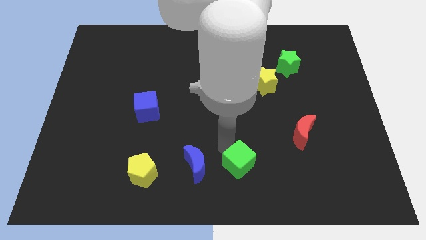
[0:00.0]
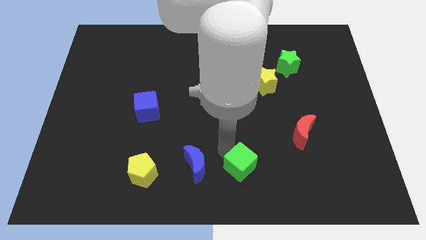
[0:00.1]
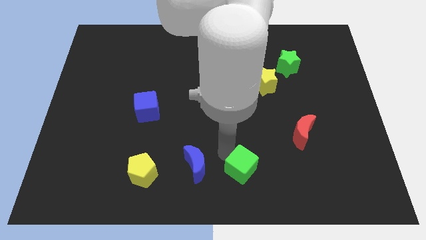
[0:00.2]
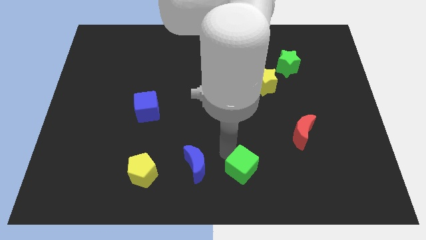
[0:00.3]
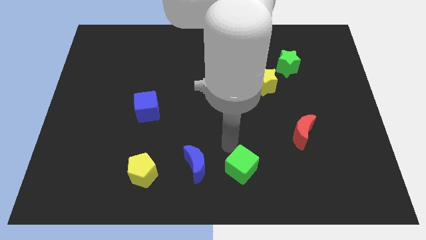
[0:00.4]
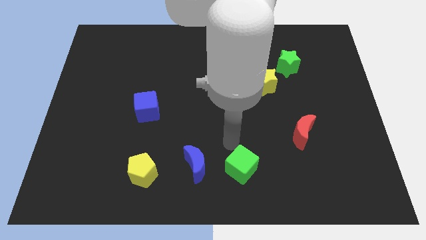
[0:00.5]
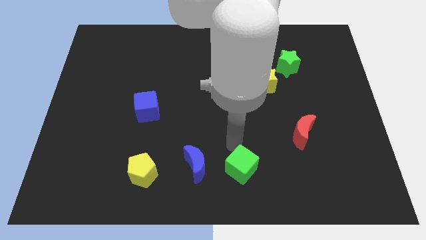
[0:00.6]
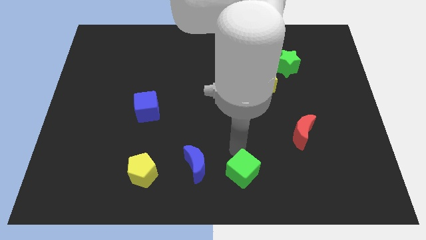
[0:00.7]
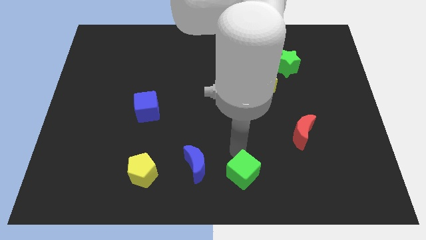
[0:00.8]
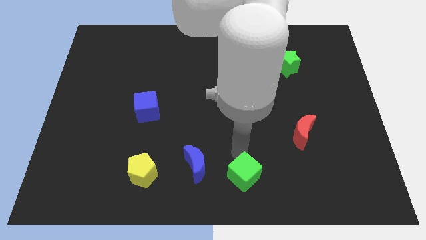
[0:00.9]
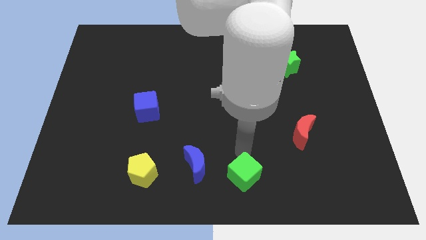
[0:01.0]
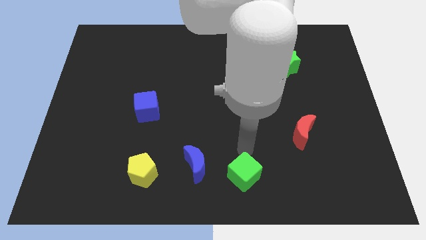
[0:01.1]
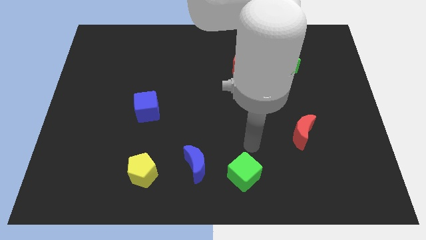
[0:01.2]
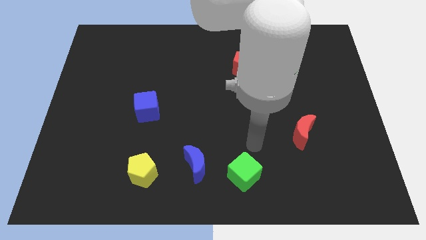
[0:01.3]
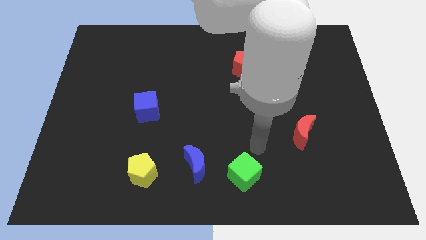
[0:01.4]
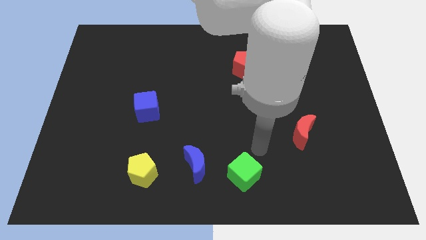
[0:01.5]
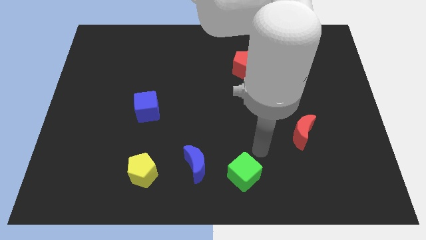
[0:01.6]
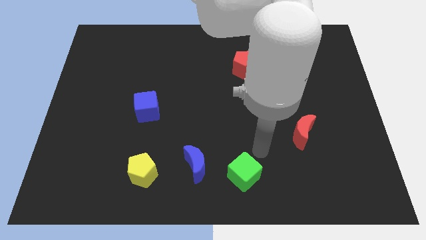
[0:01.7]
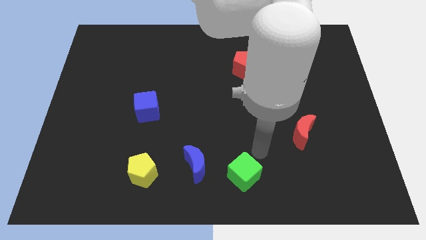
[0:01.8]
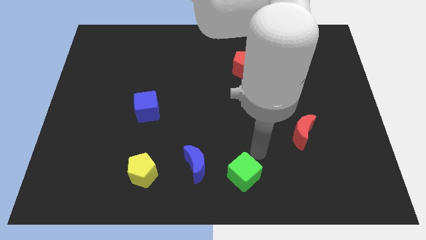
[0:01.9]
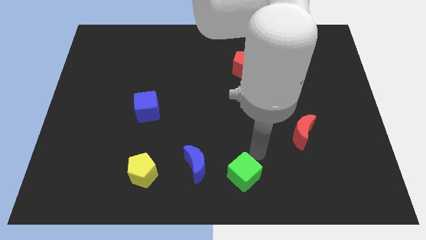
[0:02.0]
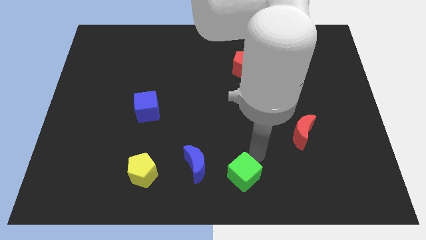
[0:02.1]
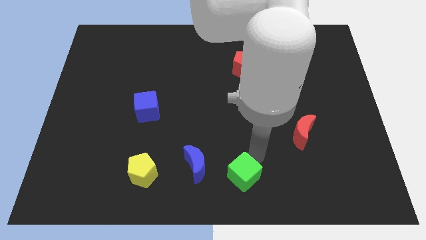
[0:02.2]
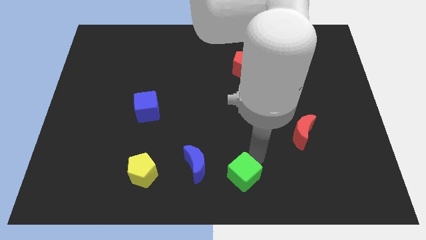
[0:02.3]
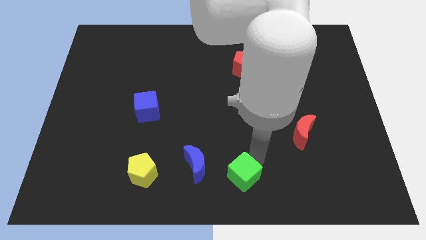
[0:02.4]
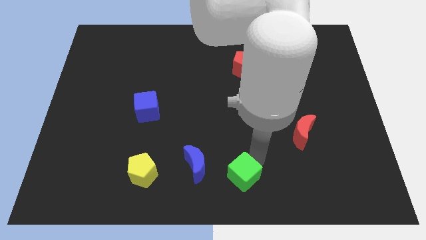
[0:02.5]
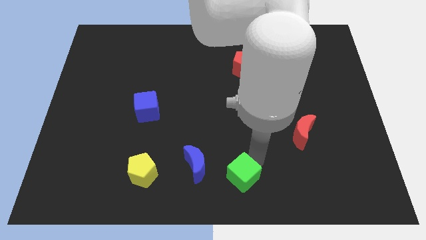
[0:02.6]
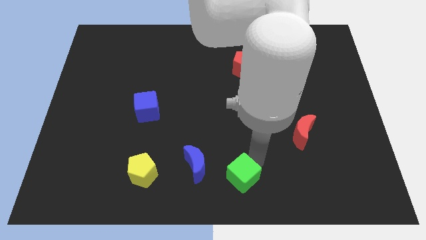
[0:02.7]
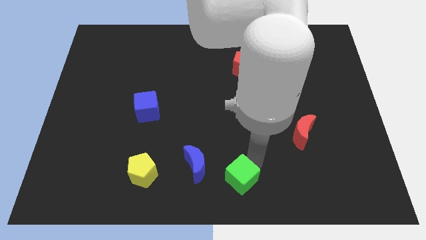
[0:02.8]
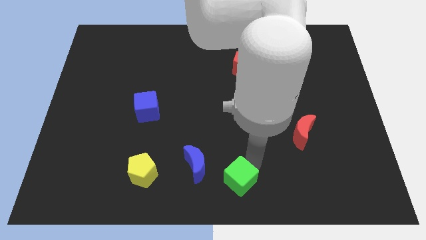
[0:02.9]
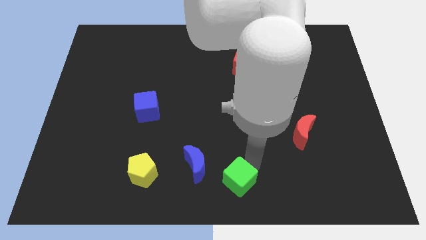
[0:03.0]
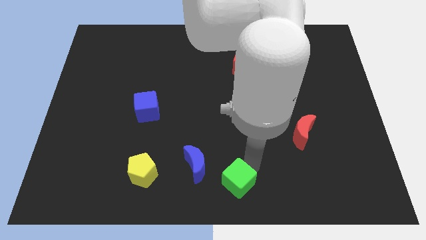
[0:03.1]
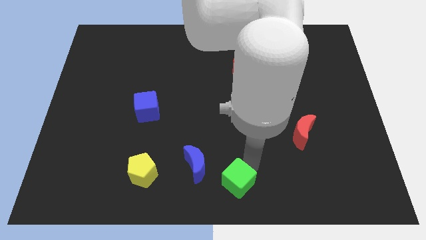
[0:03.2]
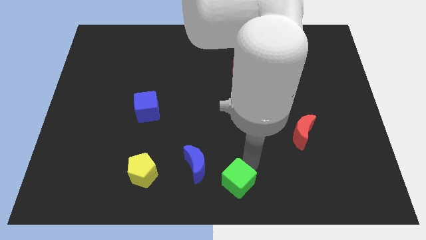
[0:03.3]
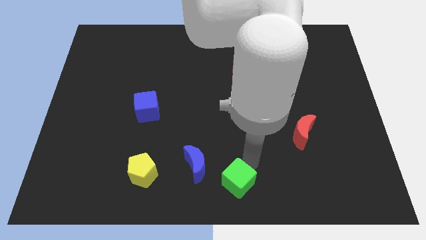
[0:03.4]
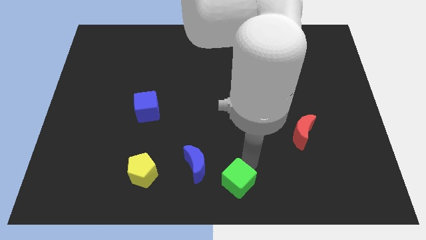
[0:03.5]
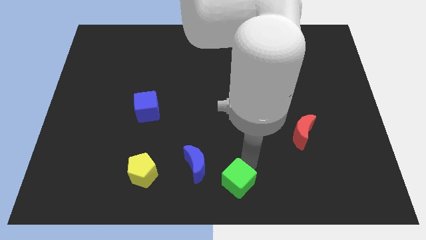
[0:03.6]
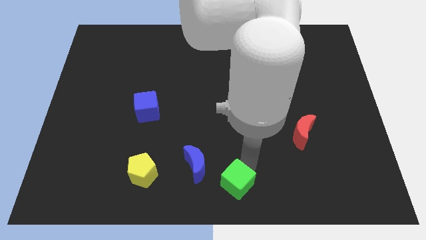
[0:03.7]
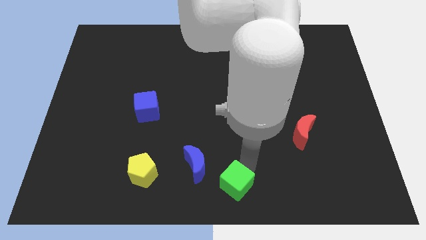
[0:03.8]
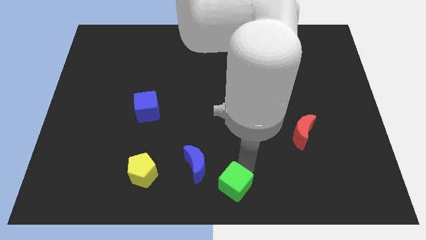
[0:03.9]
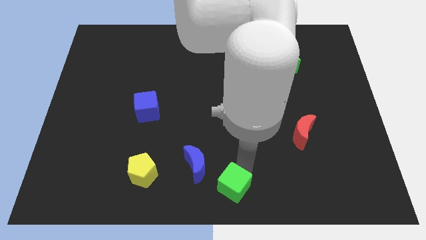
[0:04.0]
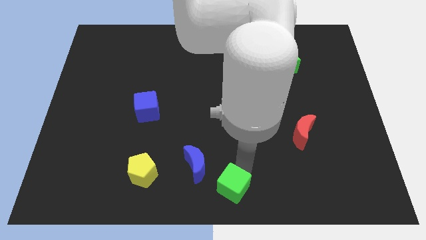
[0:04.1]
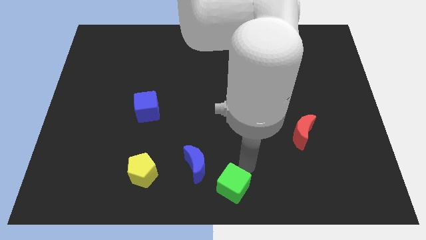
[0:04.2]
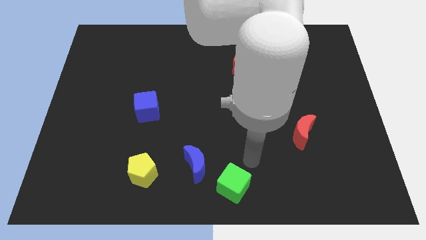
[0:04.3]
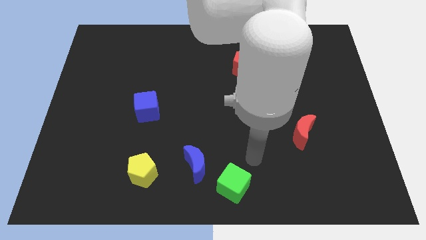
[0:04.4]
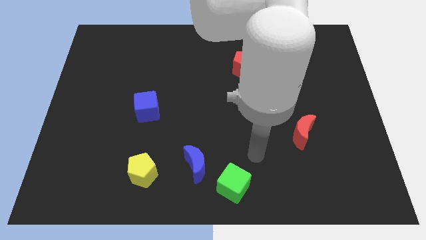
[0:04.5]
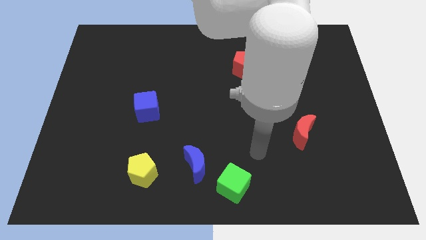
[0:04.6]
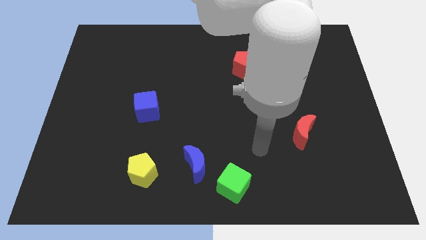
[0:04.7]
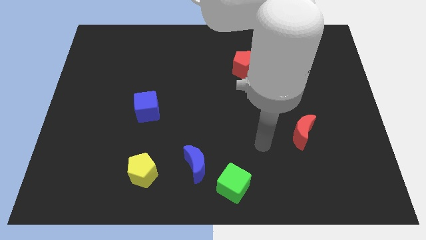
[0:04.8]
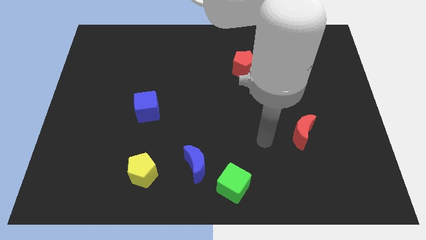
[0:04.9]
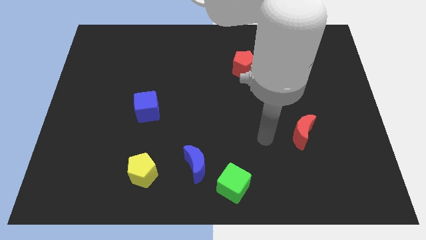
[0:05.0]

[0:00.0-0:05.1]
place green cube at the bottom center

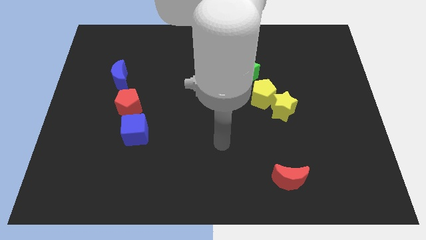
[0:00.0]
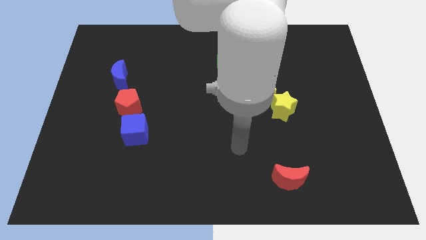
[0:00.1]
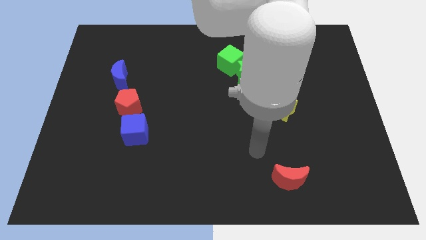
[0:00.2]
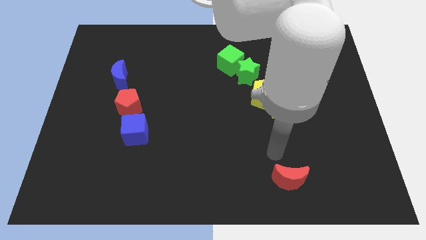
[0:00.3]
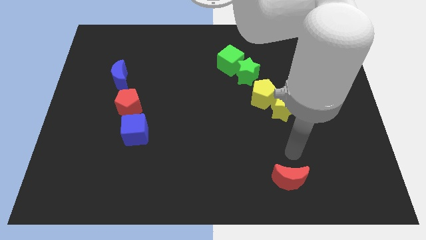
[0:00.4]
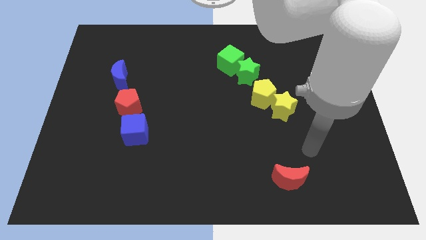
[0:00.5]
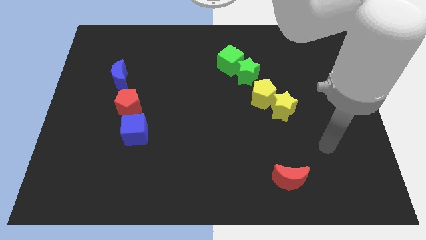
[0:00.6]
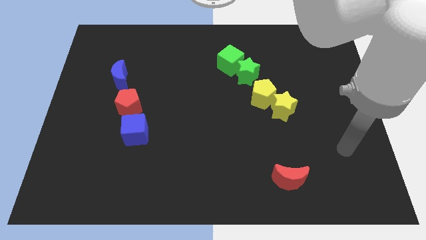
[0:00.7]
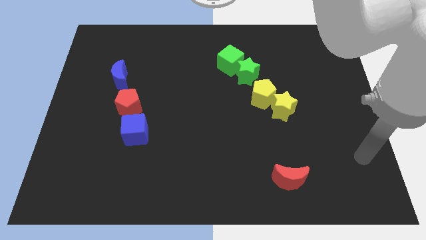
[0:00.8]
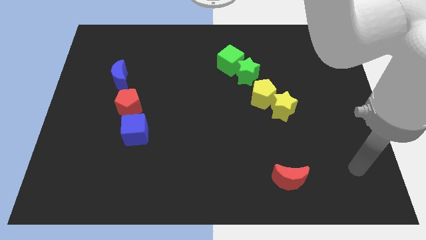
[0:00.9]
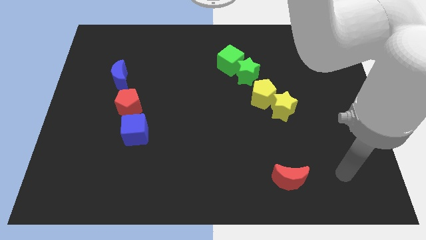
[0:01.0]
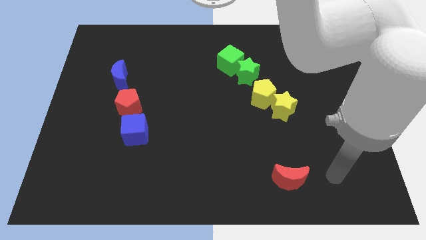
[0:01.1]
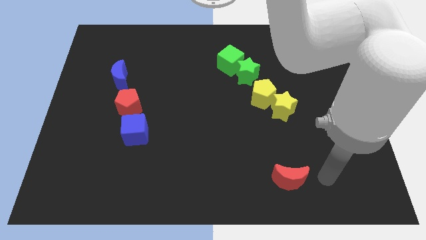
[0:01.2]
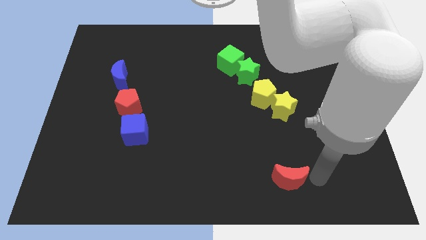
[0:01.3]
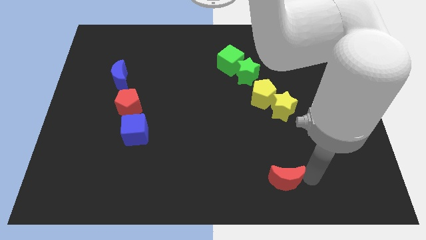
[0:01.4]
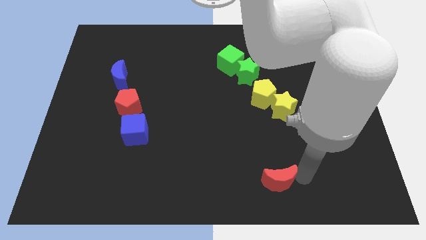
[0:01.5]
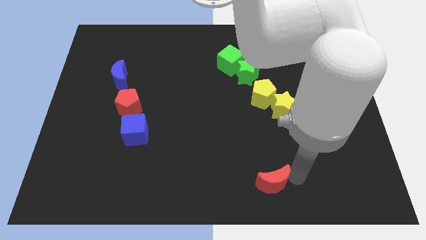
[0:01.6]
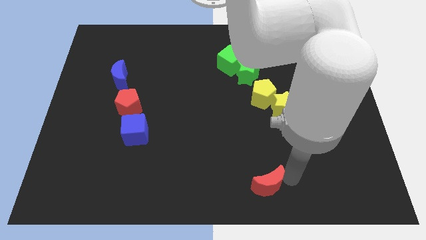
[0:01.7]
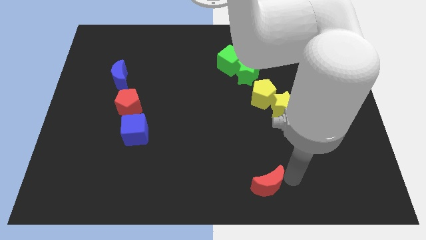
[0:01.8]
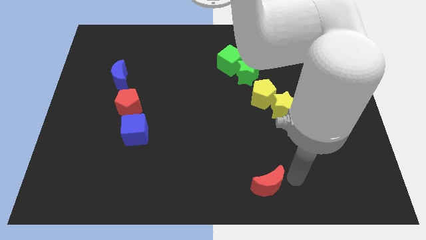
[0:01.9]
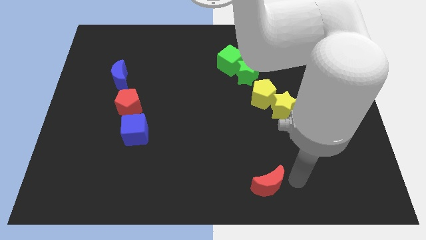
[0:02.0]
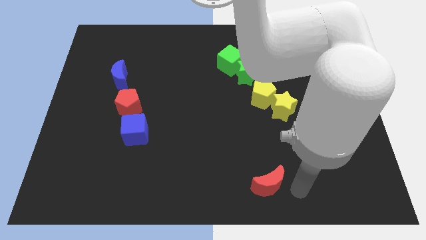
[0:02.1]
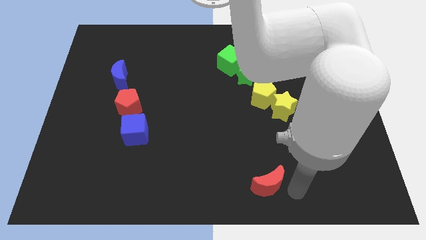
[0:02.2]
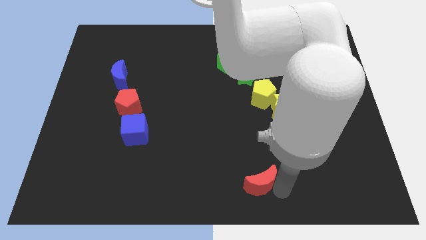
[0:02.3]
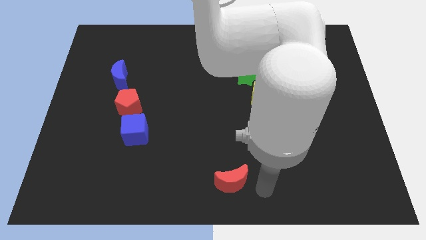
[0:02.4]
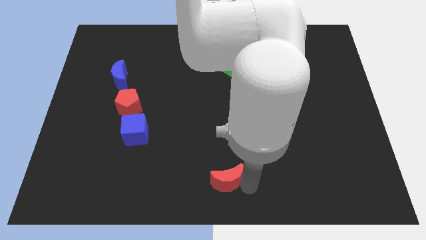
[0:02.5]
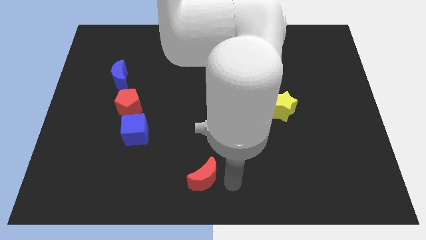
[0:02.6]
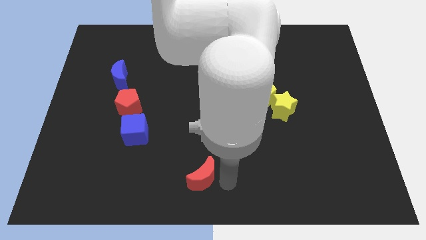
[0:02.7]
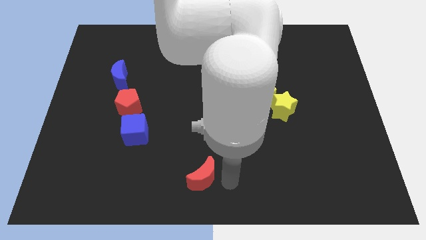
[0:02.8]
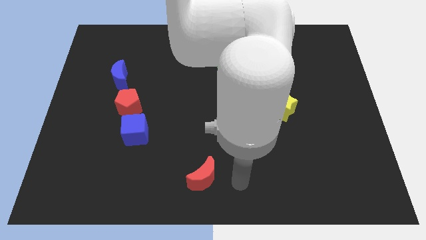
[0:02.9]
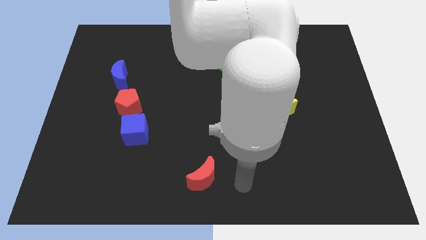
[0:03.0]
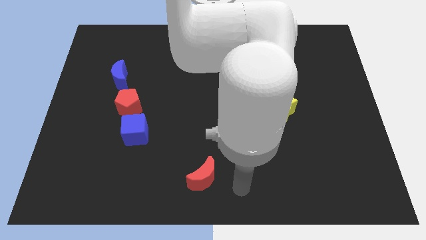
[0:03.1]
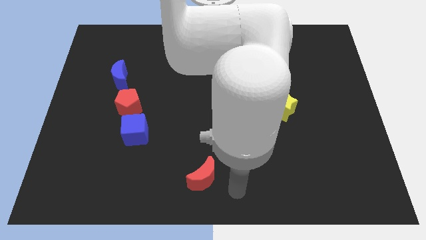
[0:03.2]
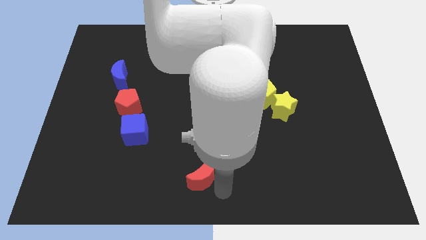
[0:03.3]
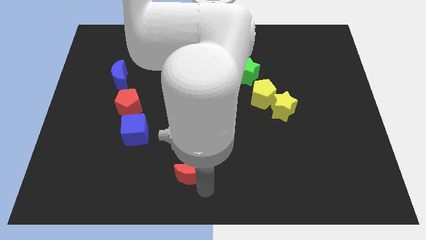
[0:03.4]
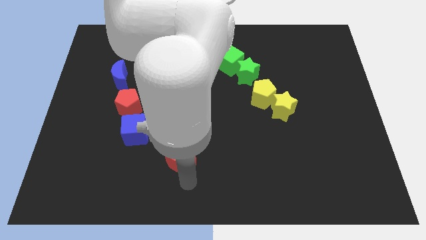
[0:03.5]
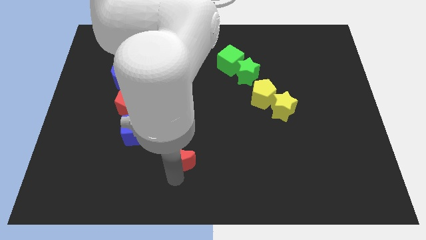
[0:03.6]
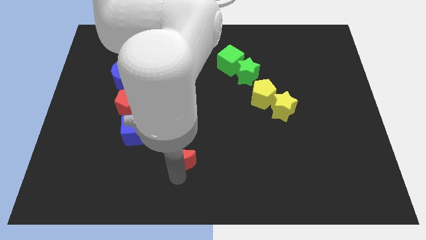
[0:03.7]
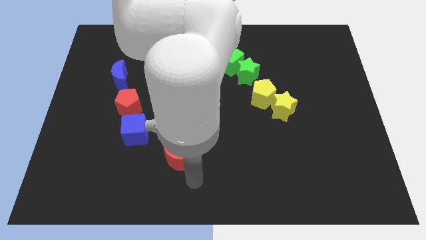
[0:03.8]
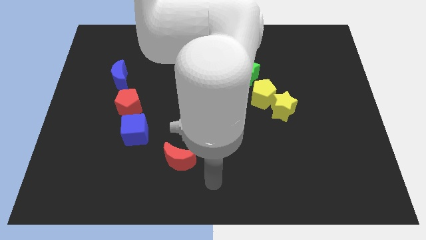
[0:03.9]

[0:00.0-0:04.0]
move the red crescent towards blue cube
